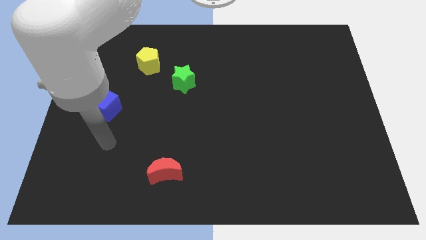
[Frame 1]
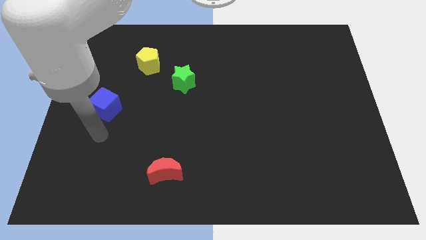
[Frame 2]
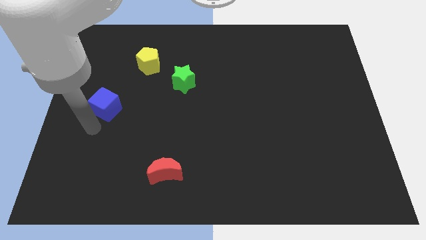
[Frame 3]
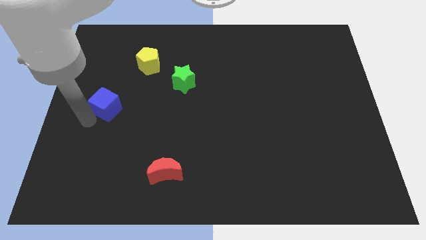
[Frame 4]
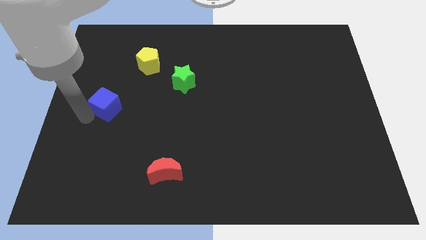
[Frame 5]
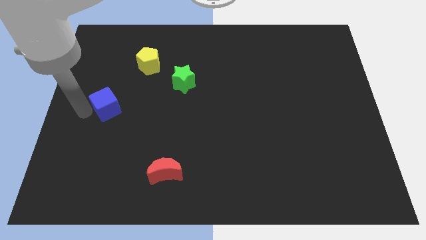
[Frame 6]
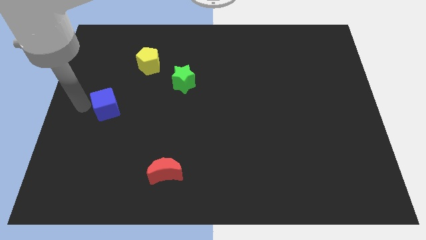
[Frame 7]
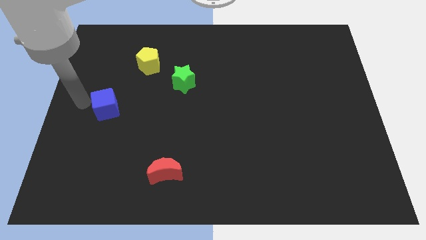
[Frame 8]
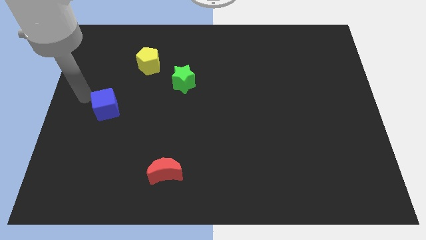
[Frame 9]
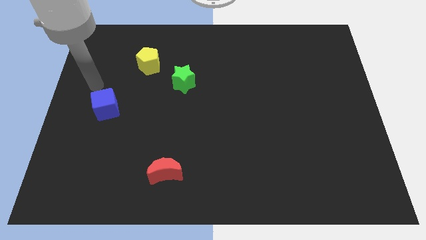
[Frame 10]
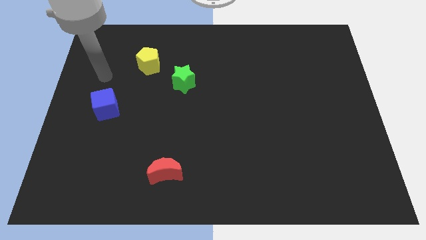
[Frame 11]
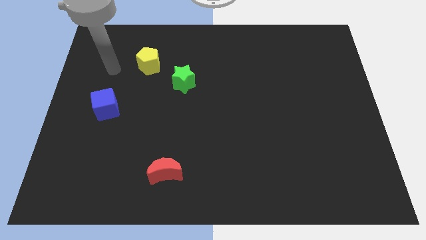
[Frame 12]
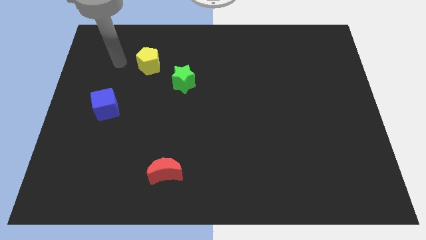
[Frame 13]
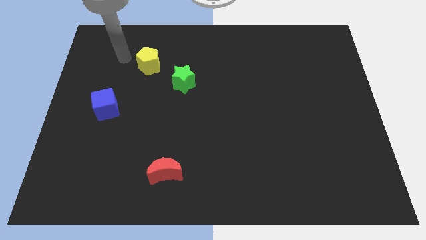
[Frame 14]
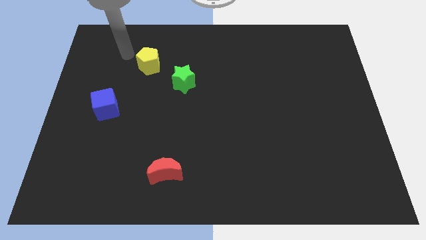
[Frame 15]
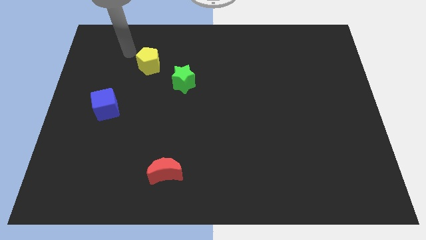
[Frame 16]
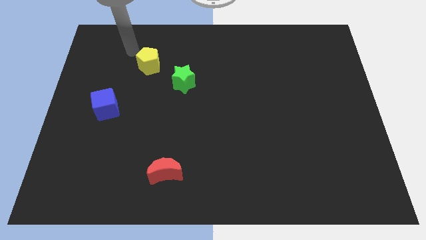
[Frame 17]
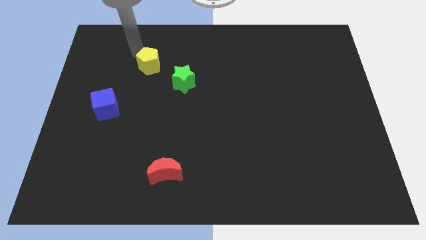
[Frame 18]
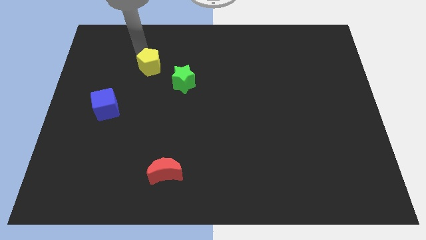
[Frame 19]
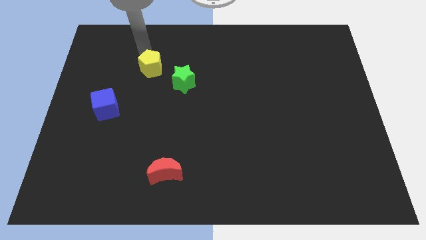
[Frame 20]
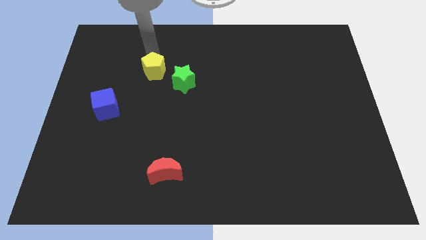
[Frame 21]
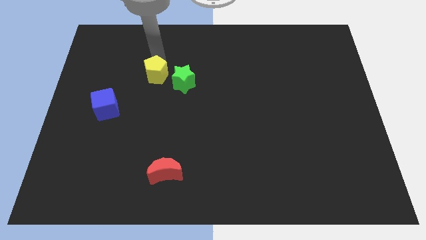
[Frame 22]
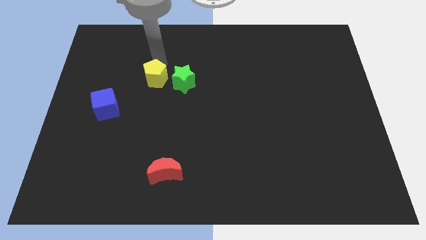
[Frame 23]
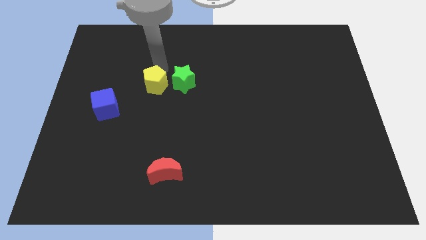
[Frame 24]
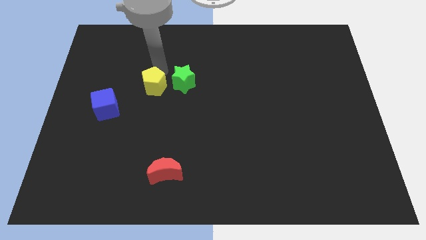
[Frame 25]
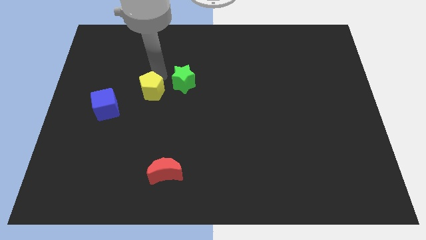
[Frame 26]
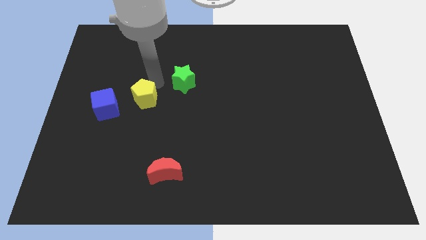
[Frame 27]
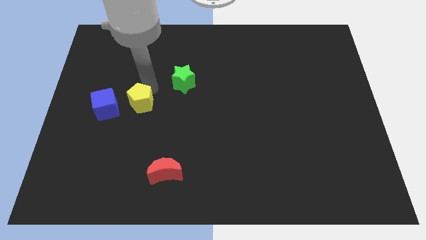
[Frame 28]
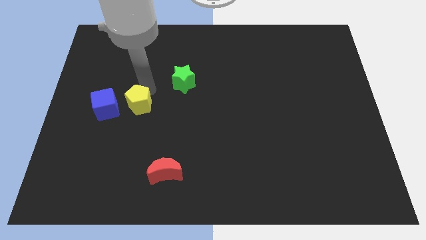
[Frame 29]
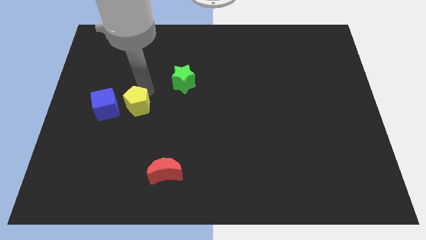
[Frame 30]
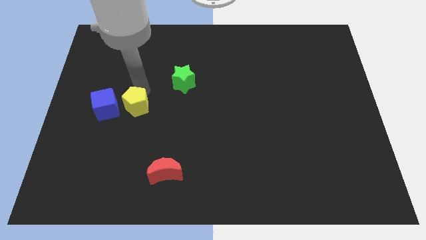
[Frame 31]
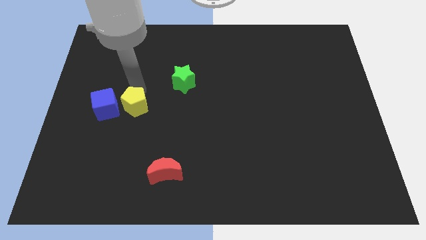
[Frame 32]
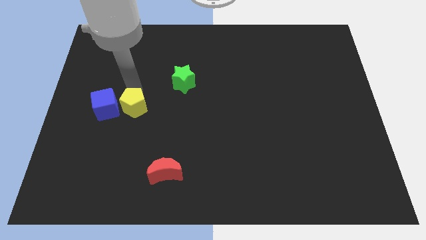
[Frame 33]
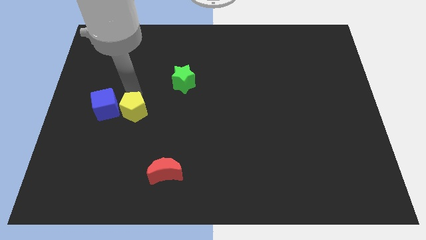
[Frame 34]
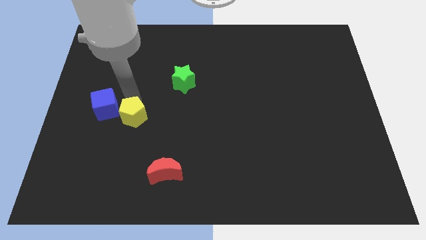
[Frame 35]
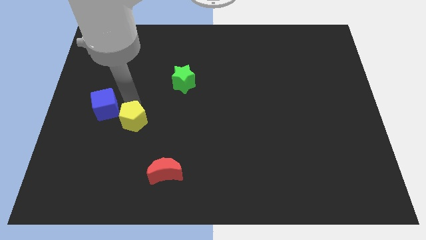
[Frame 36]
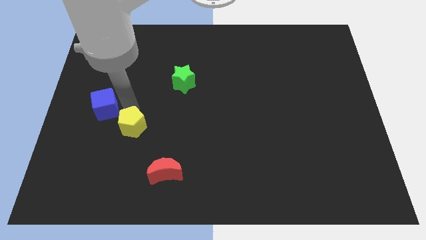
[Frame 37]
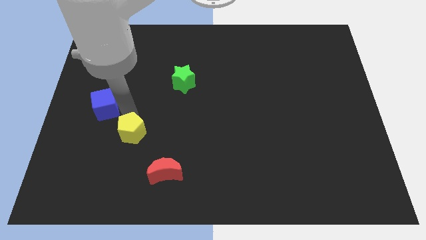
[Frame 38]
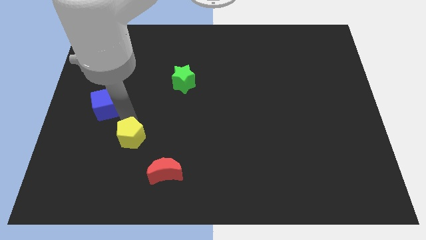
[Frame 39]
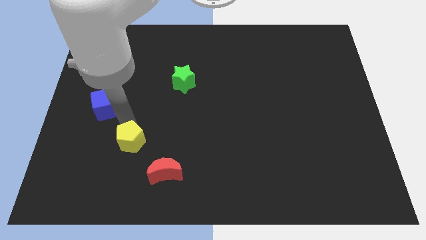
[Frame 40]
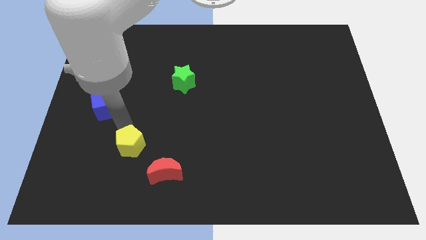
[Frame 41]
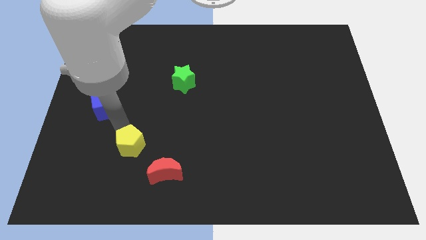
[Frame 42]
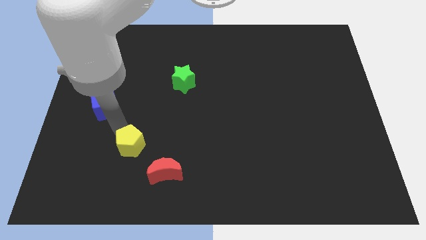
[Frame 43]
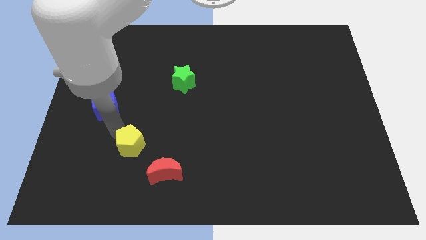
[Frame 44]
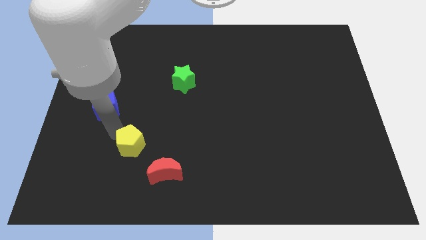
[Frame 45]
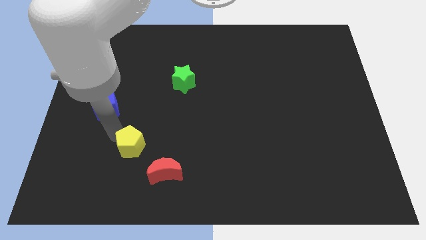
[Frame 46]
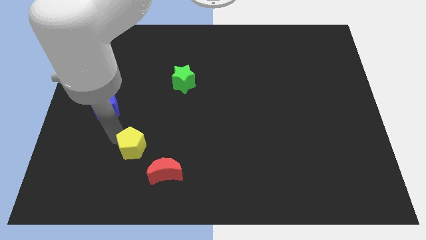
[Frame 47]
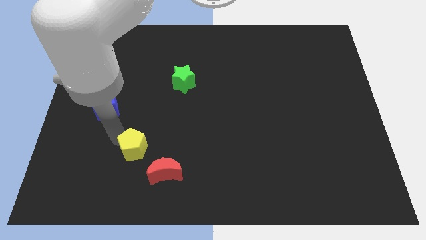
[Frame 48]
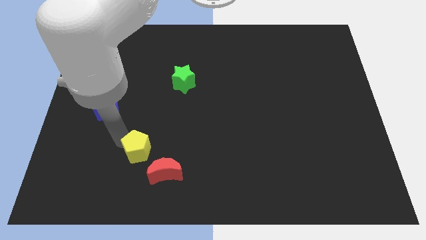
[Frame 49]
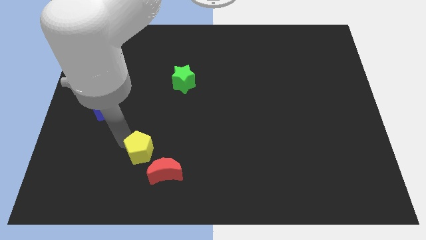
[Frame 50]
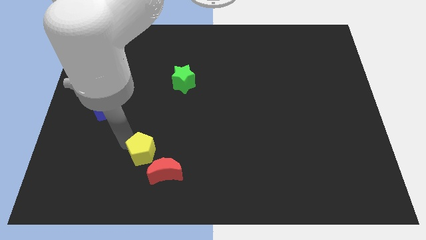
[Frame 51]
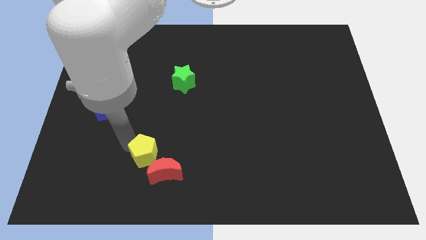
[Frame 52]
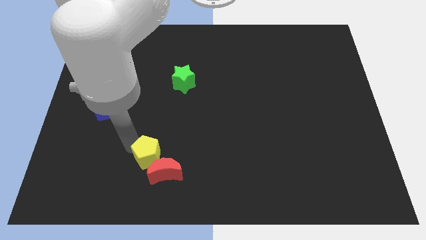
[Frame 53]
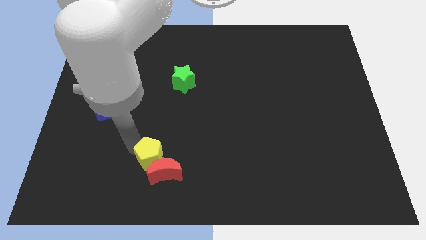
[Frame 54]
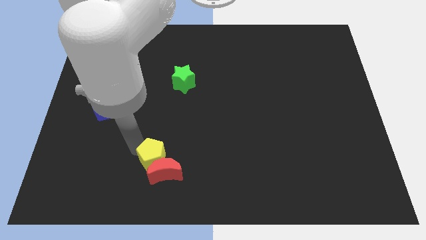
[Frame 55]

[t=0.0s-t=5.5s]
slide the pentagon to the red block

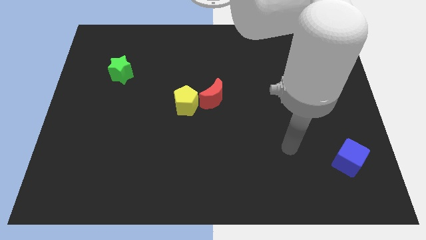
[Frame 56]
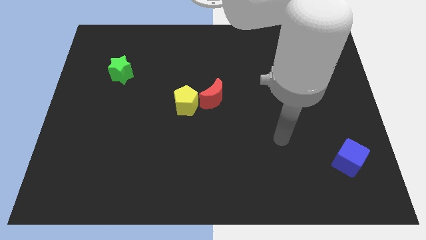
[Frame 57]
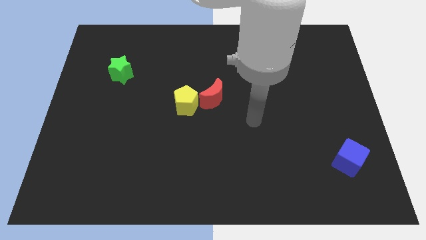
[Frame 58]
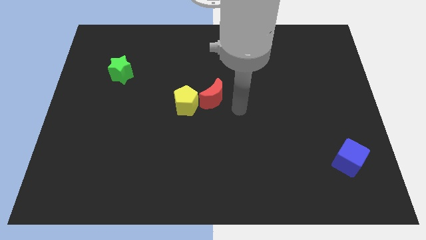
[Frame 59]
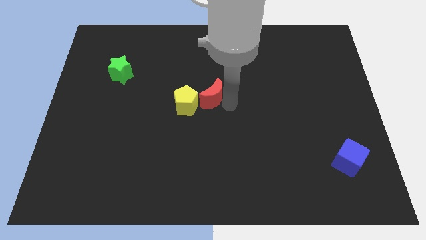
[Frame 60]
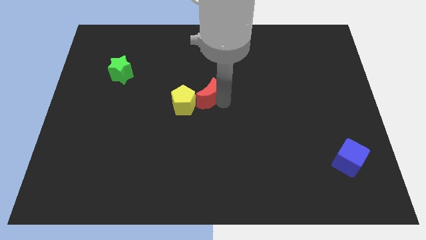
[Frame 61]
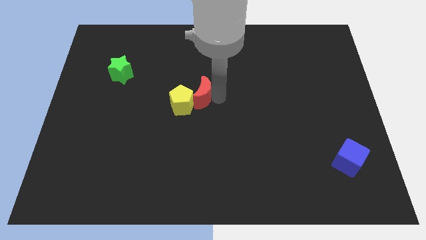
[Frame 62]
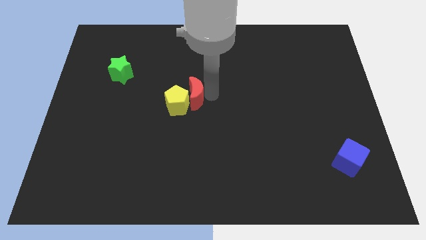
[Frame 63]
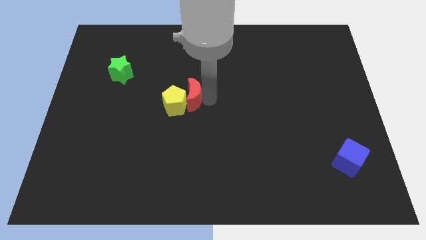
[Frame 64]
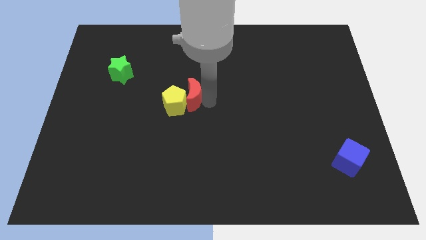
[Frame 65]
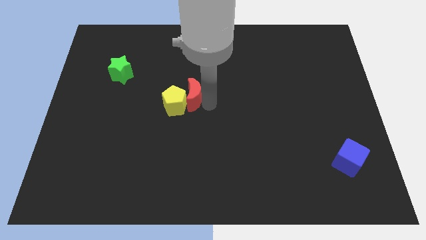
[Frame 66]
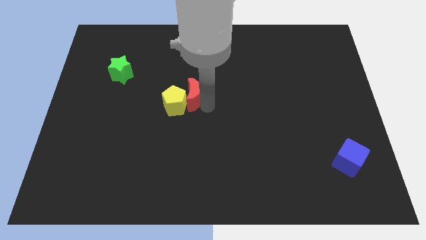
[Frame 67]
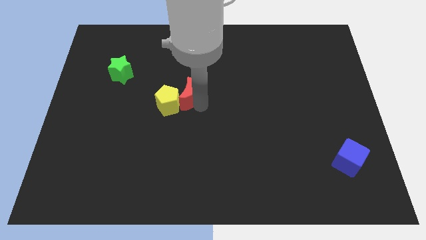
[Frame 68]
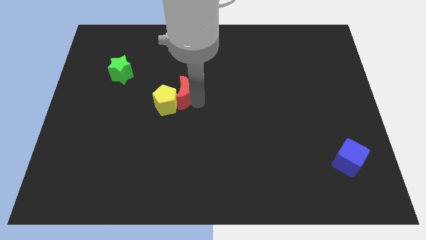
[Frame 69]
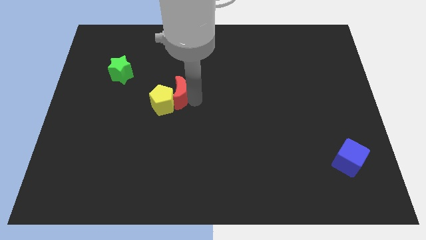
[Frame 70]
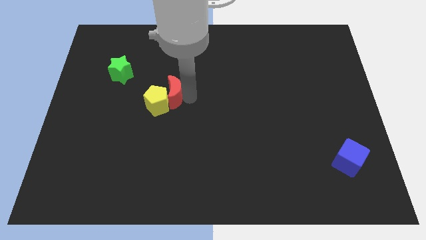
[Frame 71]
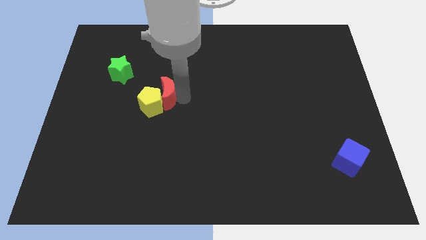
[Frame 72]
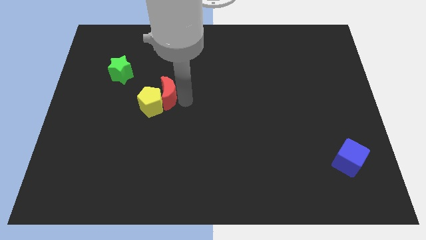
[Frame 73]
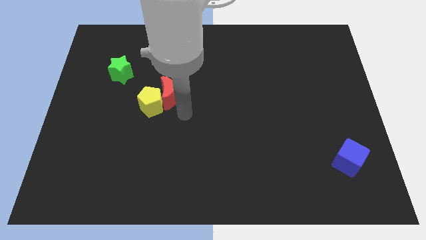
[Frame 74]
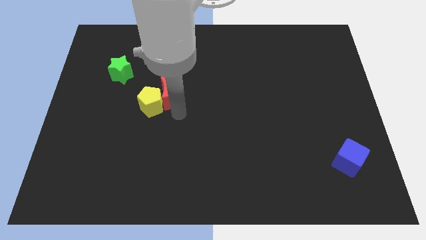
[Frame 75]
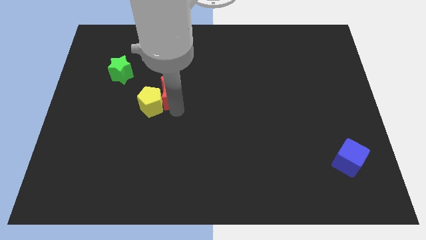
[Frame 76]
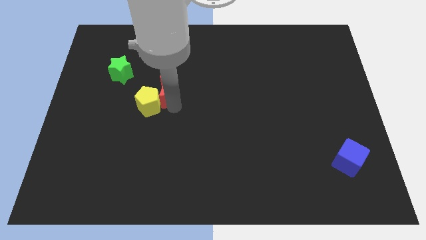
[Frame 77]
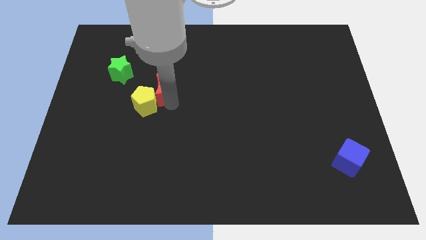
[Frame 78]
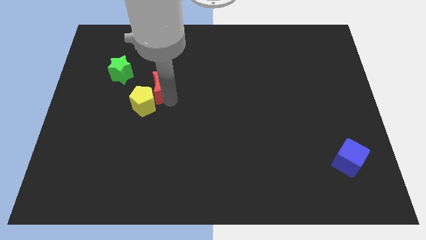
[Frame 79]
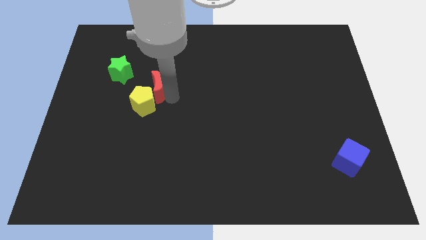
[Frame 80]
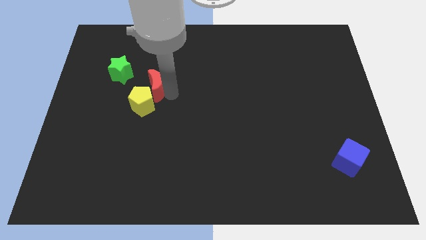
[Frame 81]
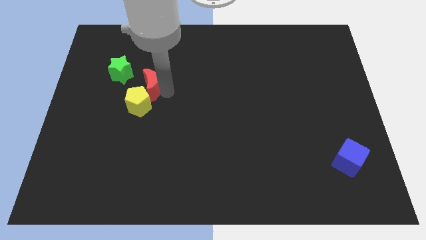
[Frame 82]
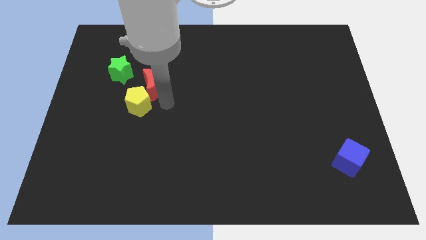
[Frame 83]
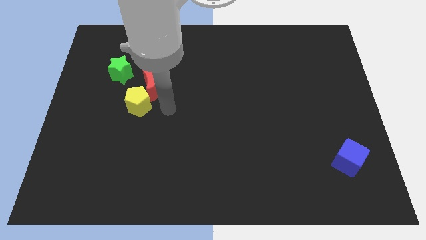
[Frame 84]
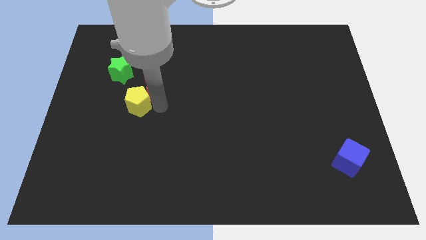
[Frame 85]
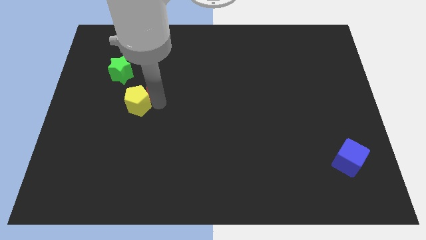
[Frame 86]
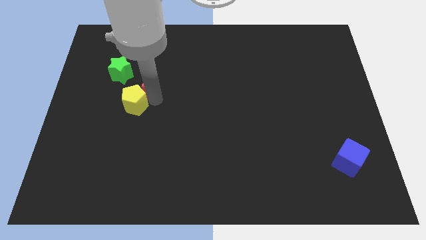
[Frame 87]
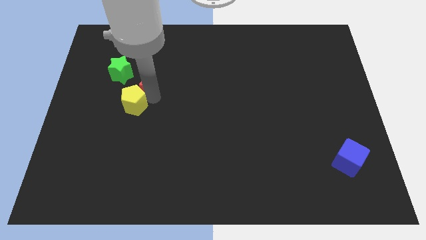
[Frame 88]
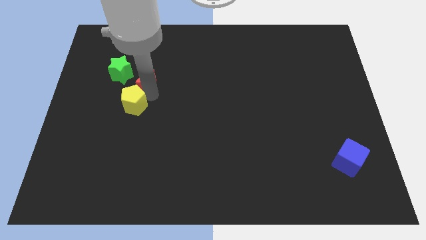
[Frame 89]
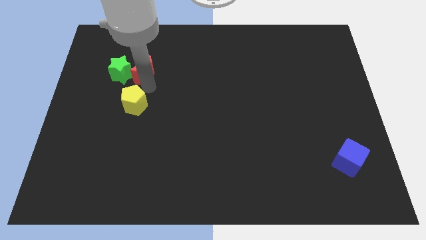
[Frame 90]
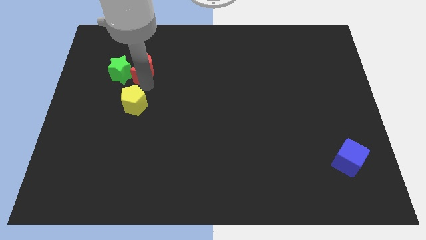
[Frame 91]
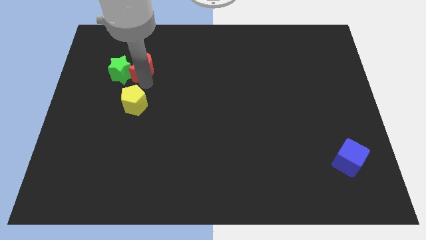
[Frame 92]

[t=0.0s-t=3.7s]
put the red block close to the star
